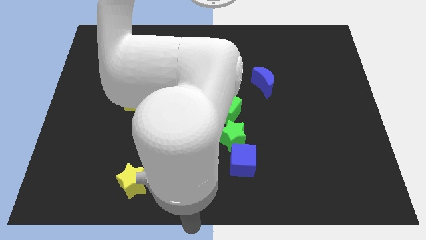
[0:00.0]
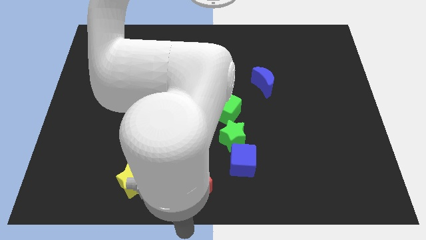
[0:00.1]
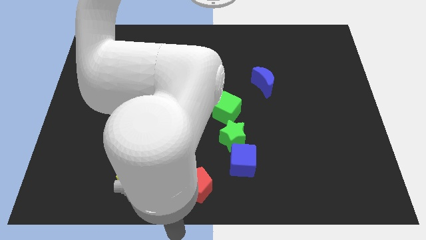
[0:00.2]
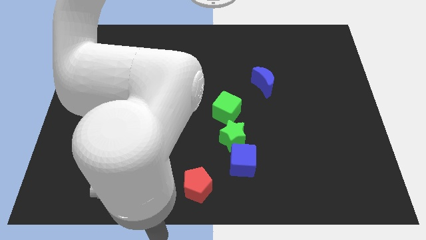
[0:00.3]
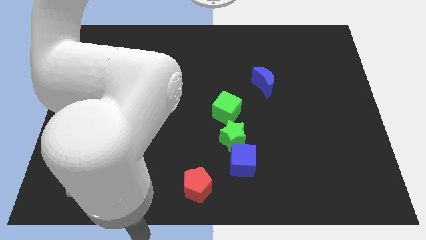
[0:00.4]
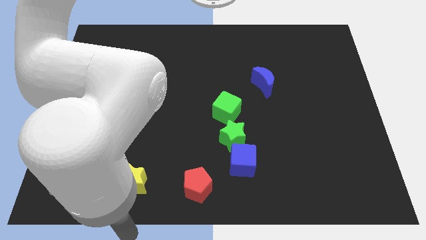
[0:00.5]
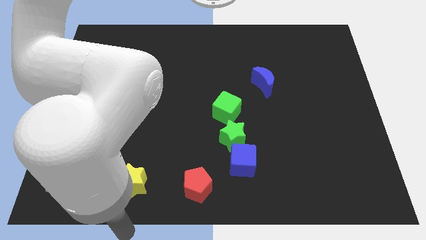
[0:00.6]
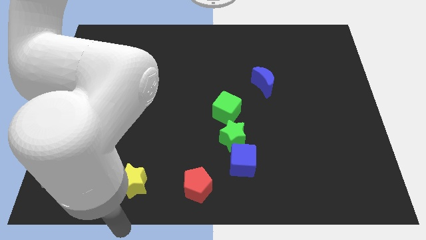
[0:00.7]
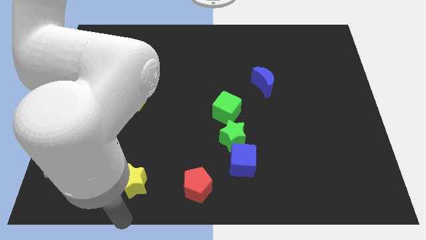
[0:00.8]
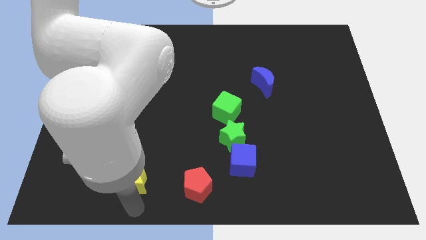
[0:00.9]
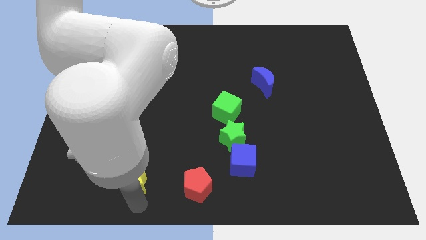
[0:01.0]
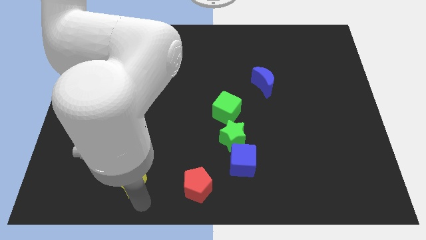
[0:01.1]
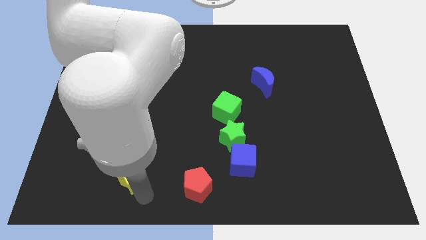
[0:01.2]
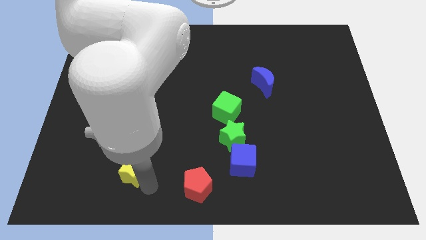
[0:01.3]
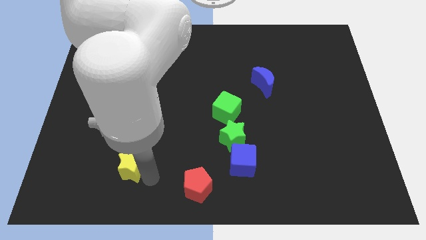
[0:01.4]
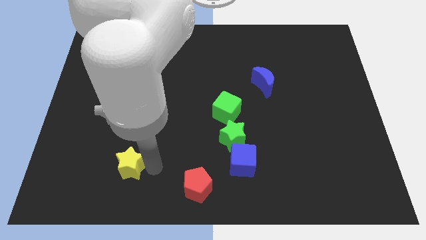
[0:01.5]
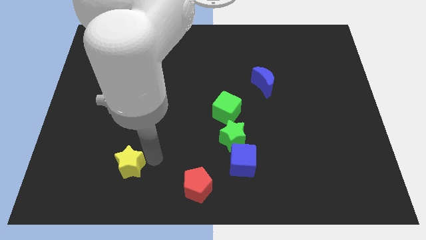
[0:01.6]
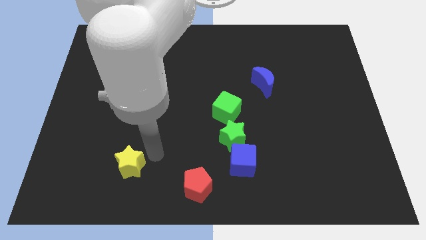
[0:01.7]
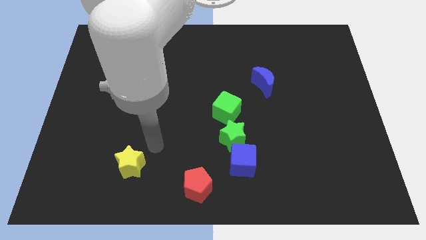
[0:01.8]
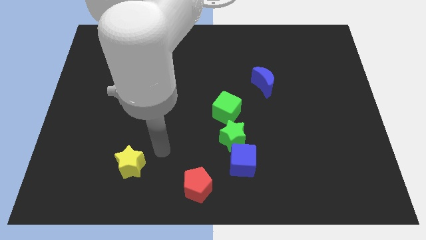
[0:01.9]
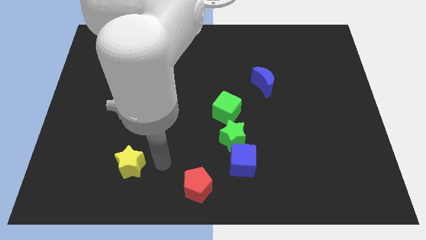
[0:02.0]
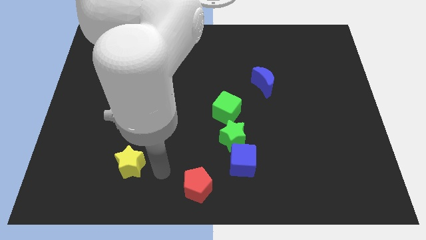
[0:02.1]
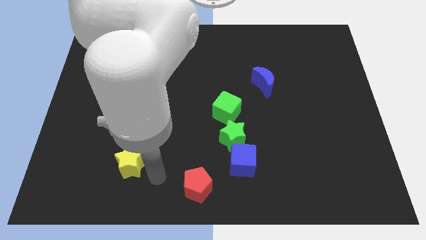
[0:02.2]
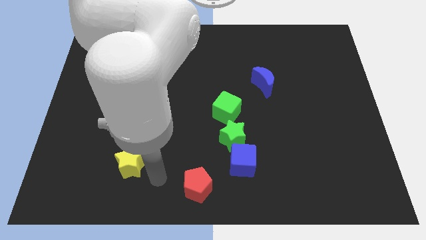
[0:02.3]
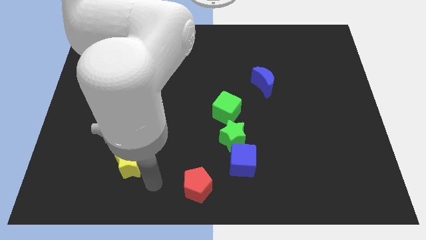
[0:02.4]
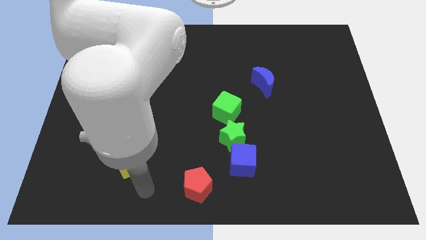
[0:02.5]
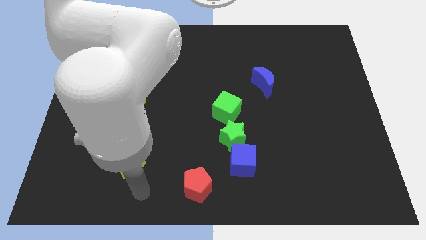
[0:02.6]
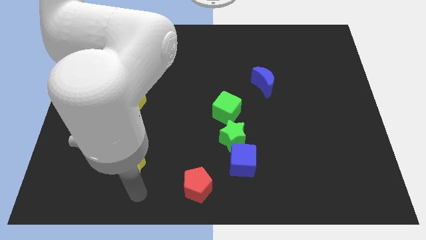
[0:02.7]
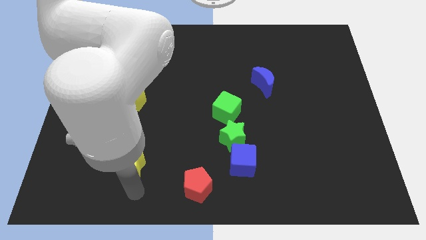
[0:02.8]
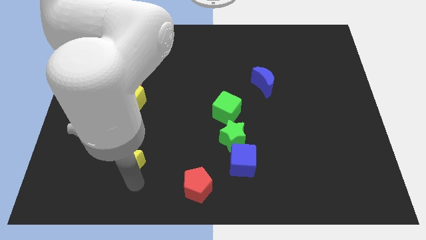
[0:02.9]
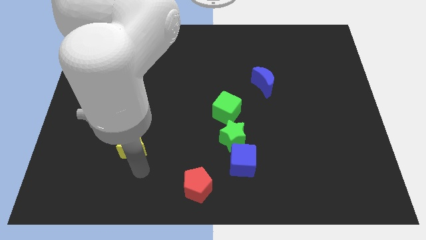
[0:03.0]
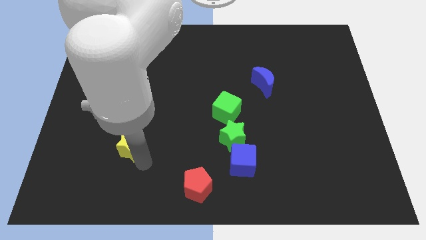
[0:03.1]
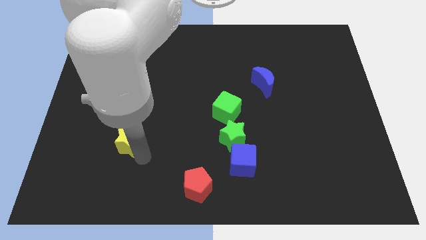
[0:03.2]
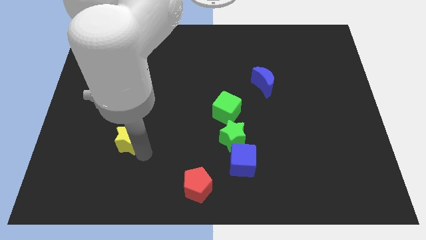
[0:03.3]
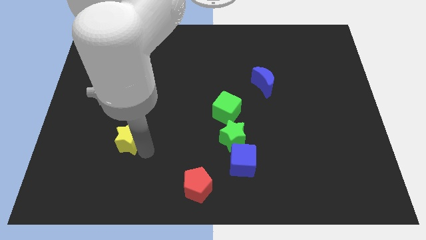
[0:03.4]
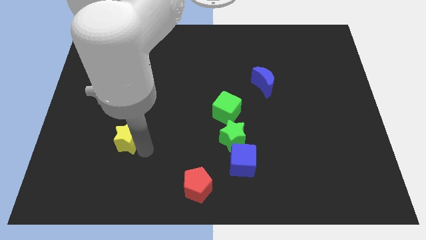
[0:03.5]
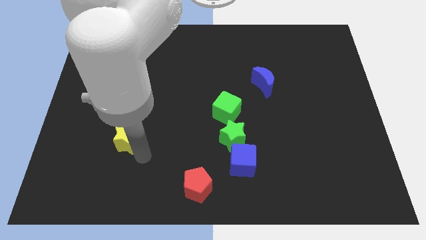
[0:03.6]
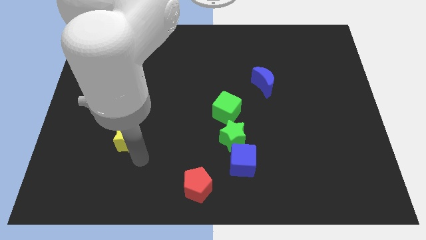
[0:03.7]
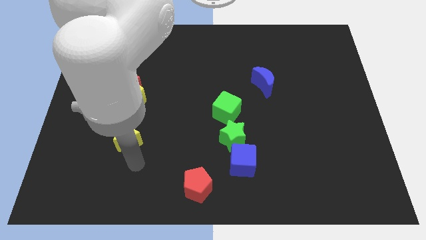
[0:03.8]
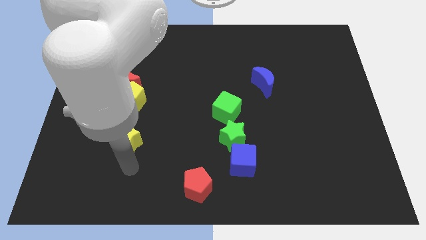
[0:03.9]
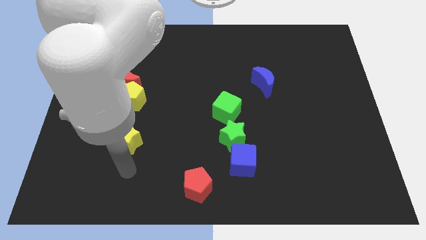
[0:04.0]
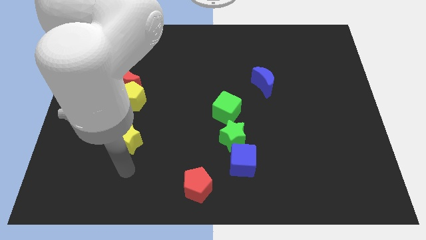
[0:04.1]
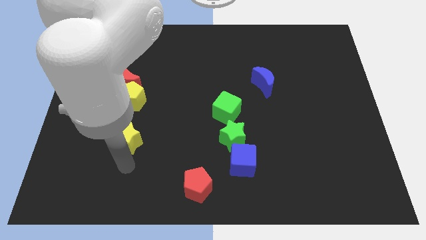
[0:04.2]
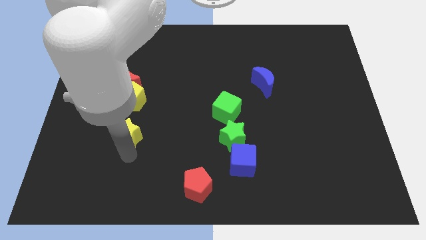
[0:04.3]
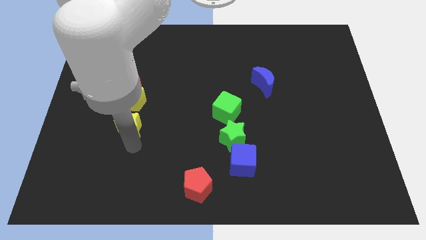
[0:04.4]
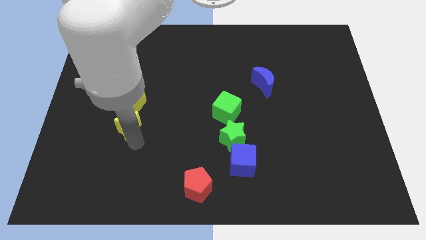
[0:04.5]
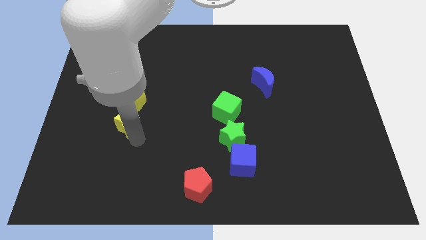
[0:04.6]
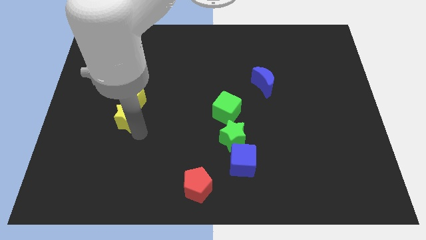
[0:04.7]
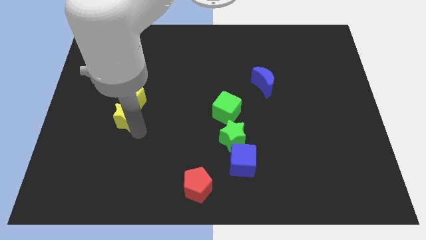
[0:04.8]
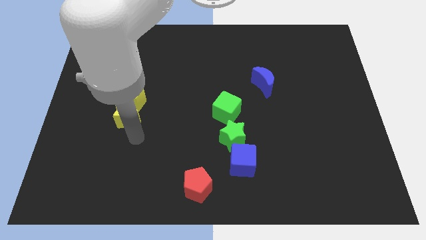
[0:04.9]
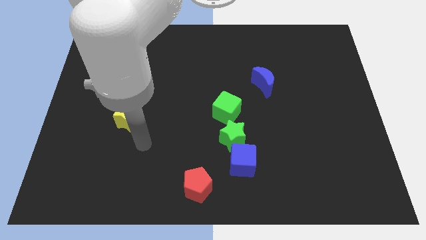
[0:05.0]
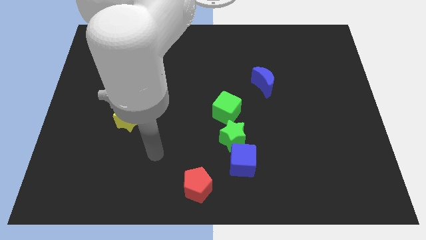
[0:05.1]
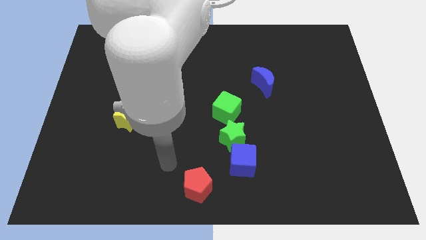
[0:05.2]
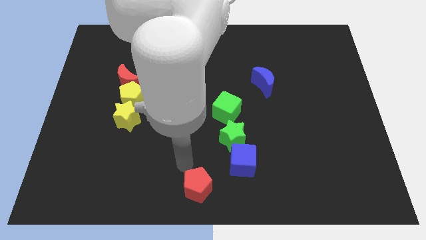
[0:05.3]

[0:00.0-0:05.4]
move the yellow star towards the yellow pentagon

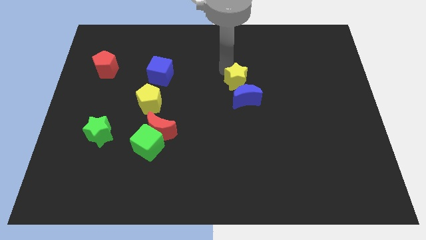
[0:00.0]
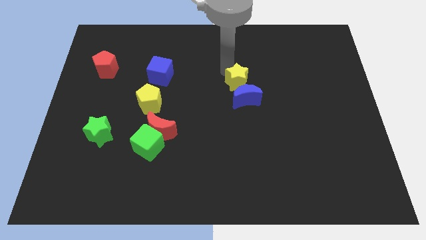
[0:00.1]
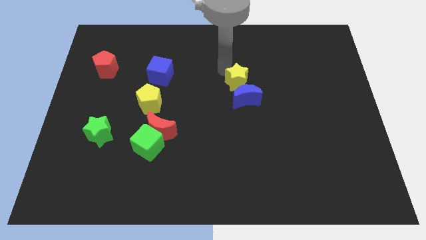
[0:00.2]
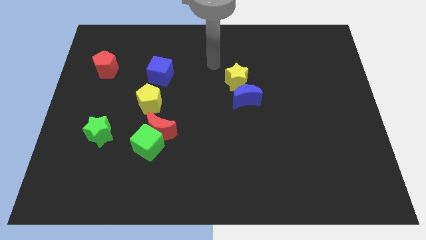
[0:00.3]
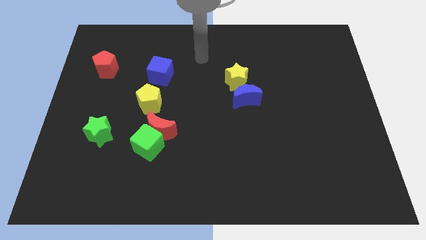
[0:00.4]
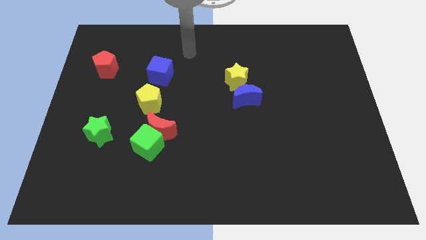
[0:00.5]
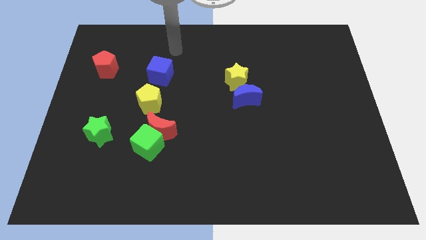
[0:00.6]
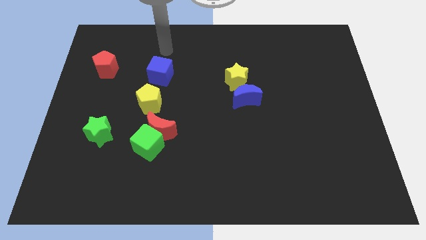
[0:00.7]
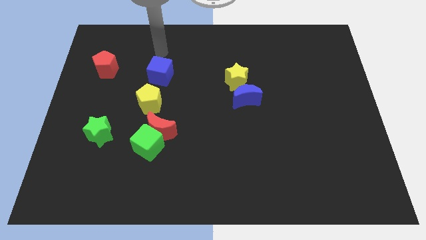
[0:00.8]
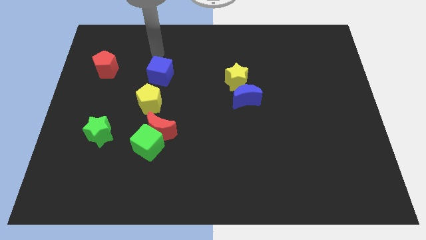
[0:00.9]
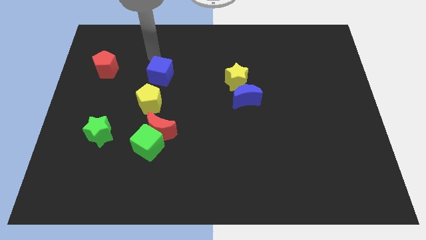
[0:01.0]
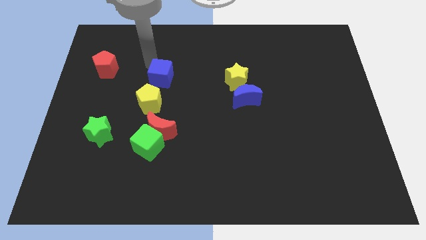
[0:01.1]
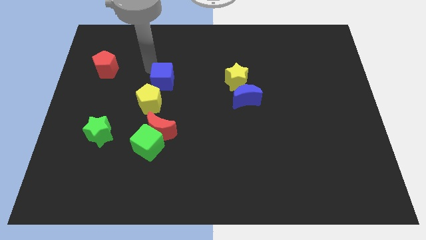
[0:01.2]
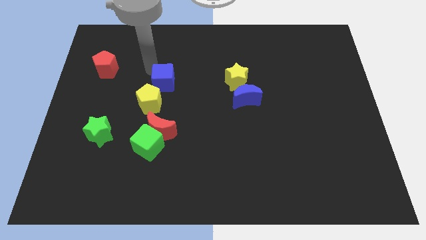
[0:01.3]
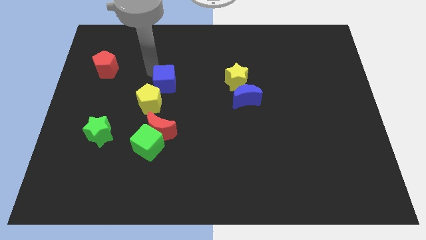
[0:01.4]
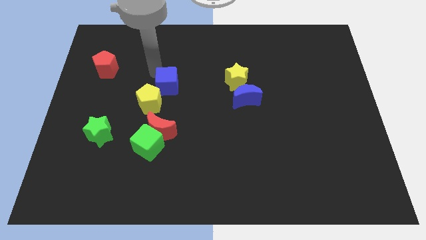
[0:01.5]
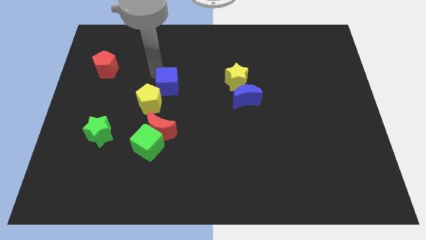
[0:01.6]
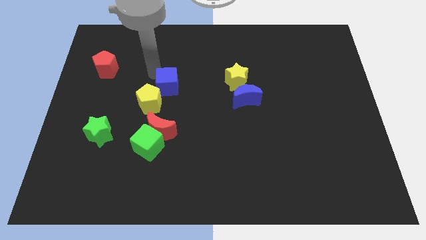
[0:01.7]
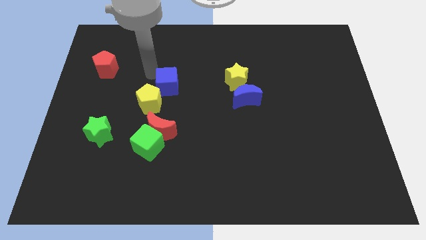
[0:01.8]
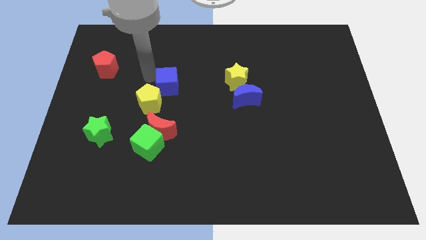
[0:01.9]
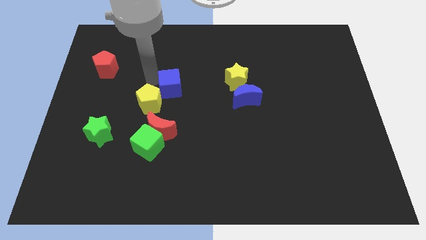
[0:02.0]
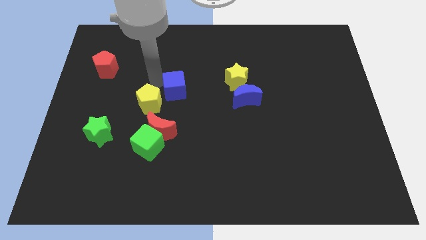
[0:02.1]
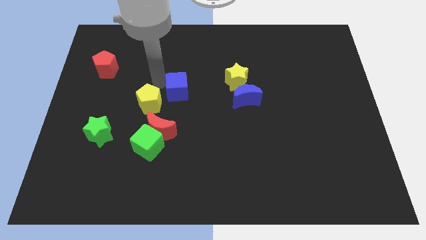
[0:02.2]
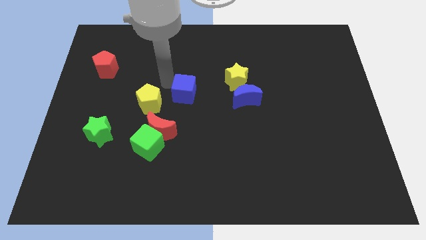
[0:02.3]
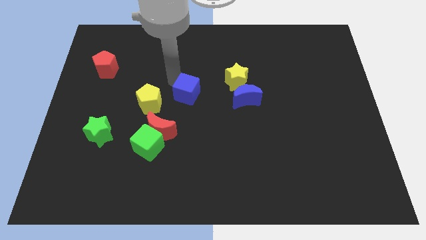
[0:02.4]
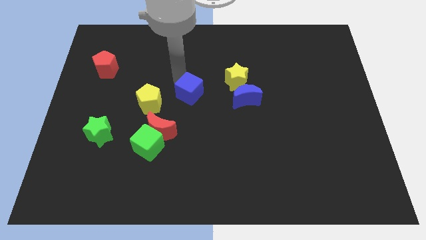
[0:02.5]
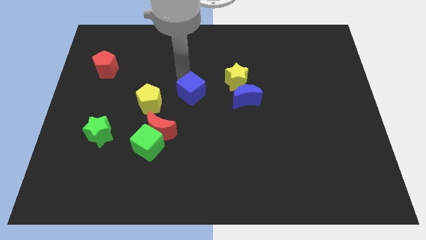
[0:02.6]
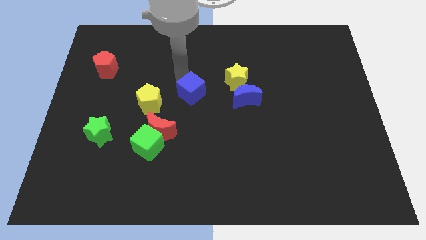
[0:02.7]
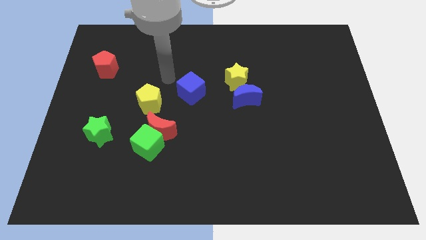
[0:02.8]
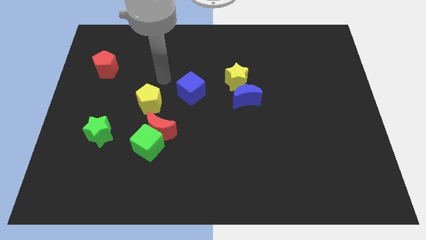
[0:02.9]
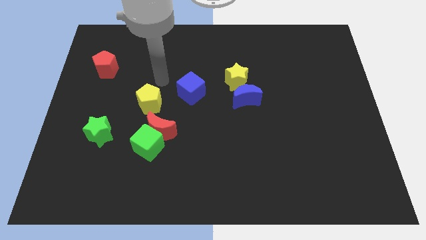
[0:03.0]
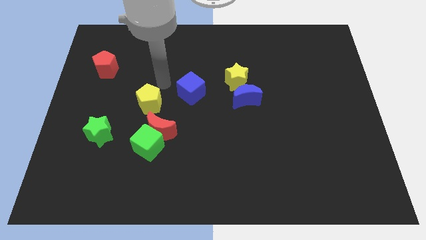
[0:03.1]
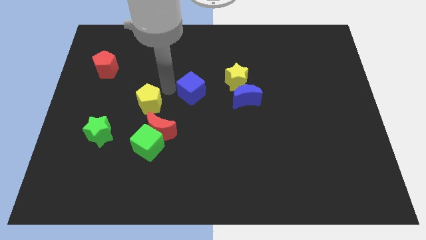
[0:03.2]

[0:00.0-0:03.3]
put the blue cube in between the yellow blocks

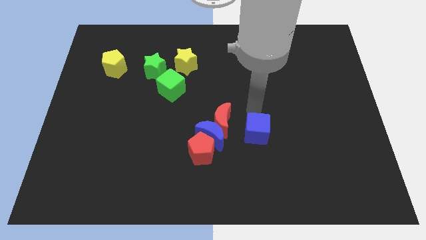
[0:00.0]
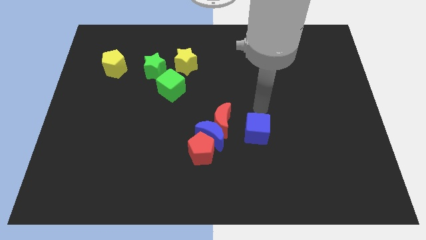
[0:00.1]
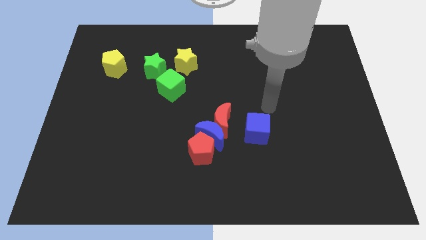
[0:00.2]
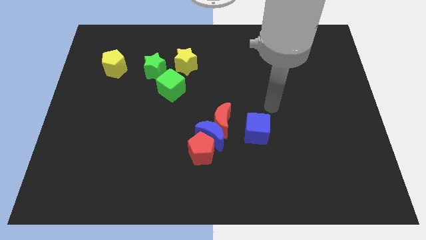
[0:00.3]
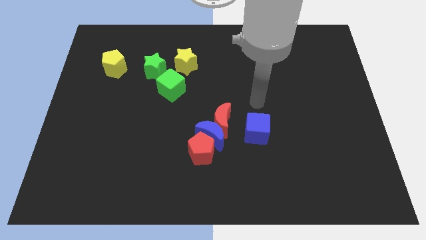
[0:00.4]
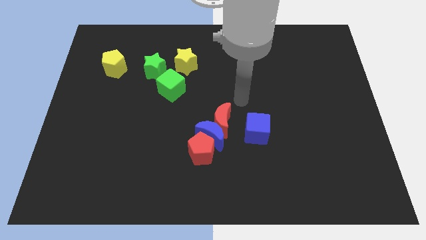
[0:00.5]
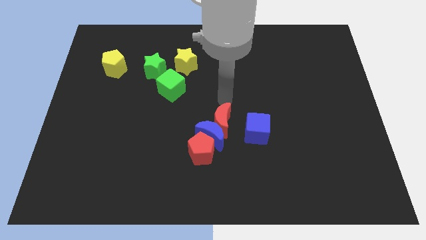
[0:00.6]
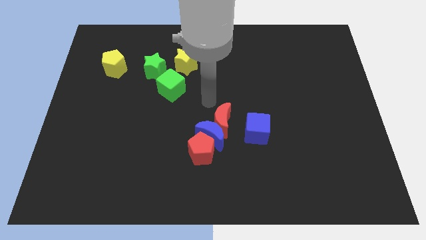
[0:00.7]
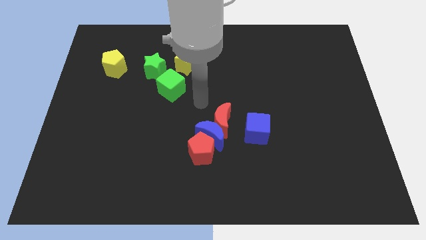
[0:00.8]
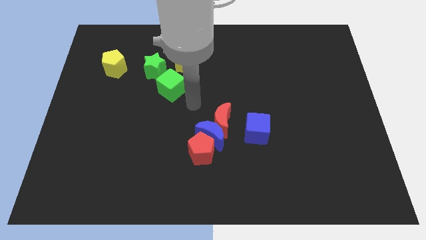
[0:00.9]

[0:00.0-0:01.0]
go away from the blue cube
